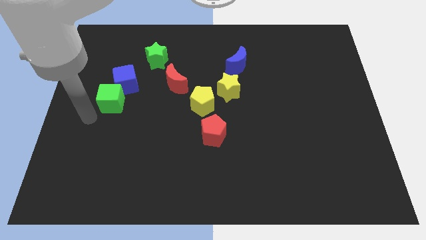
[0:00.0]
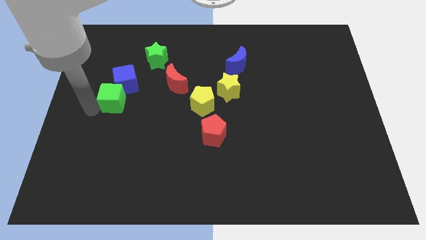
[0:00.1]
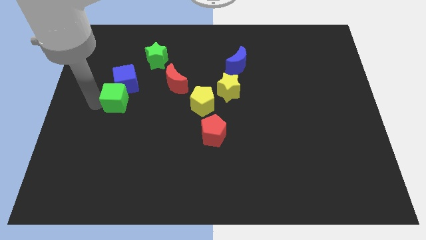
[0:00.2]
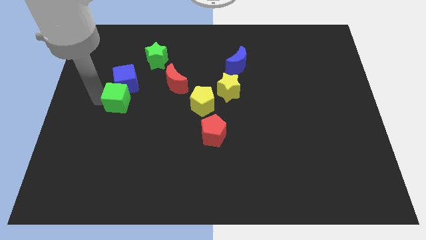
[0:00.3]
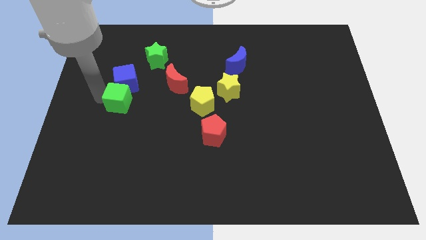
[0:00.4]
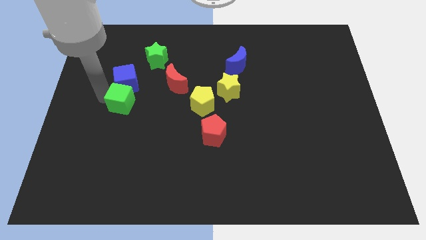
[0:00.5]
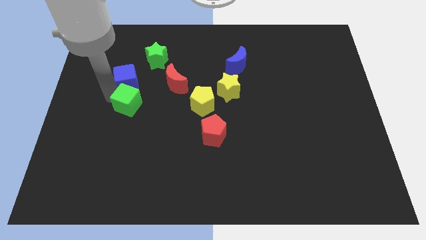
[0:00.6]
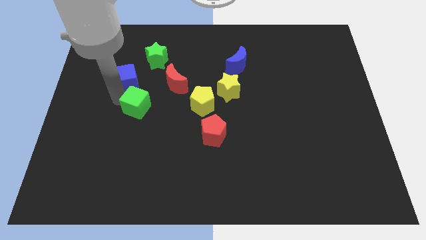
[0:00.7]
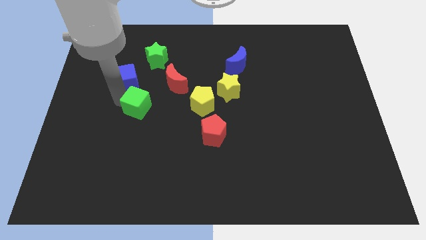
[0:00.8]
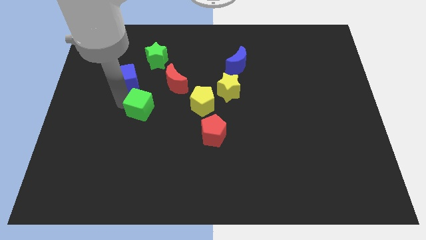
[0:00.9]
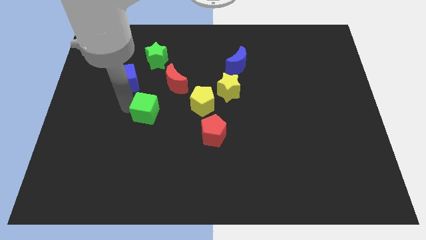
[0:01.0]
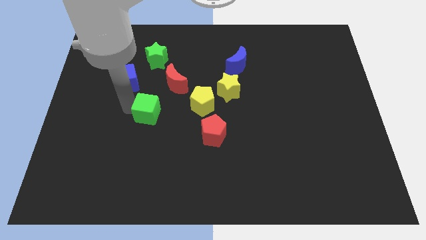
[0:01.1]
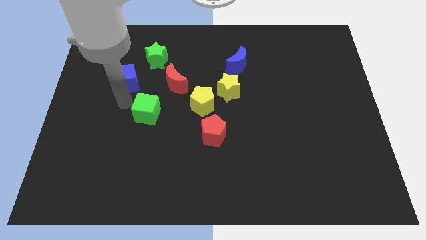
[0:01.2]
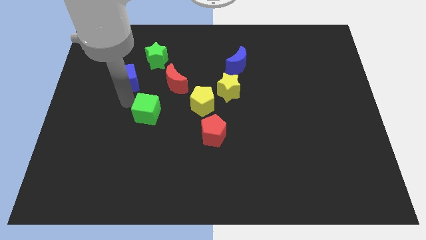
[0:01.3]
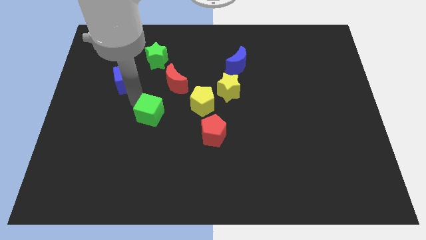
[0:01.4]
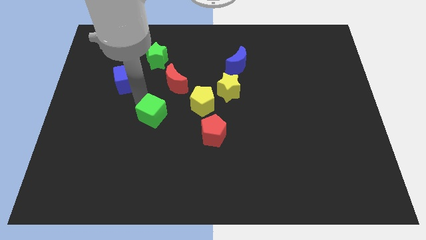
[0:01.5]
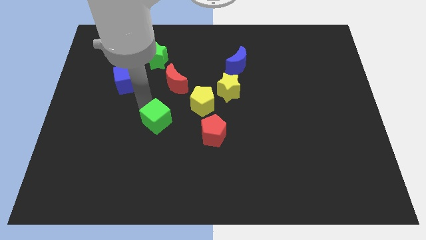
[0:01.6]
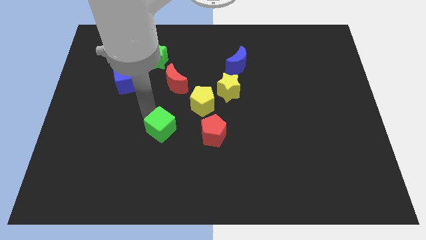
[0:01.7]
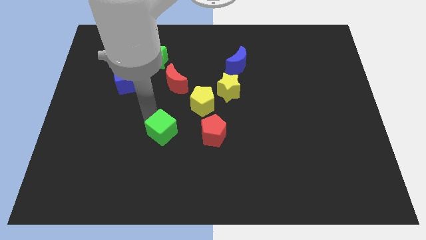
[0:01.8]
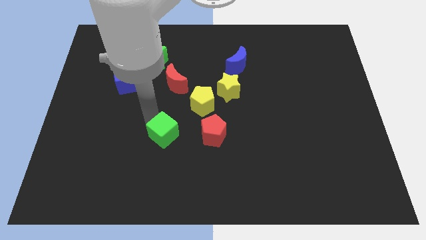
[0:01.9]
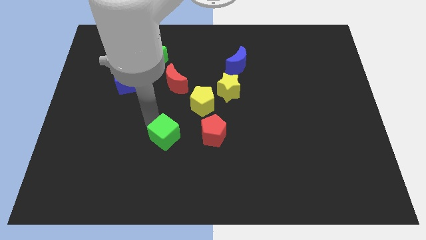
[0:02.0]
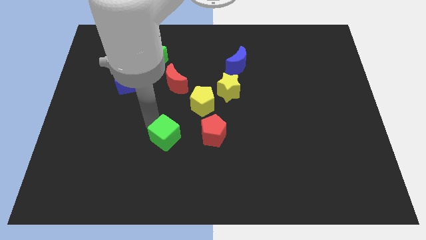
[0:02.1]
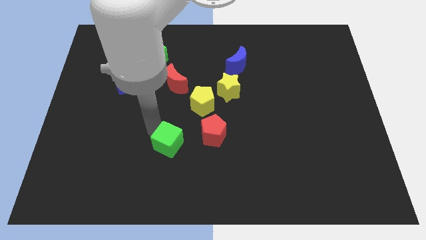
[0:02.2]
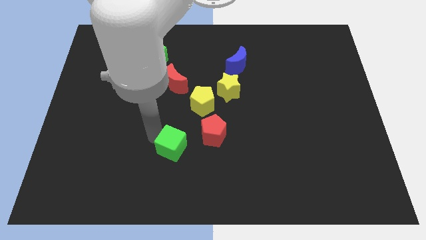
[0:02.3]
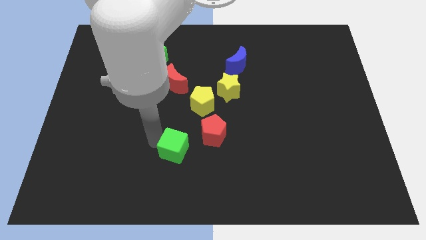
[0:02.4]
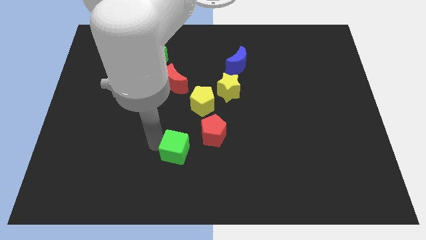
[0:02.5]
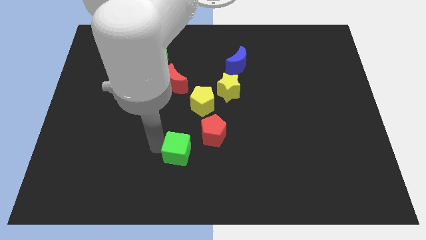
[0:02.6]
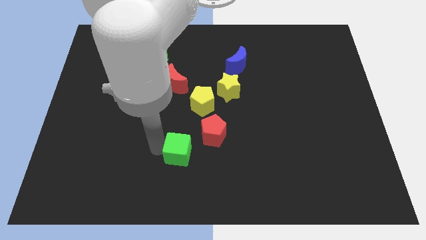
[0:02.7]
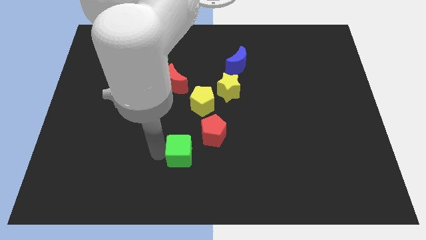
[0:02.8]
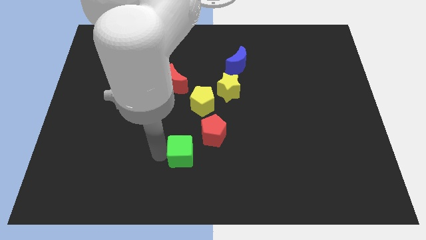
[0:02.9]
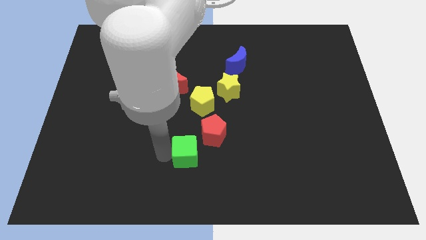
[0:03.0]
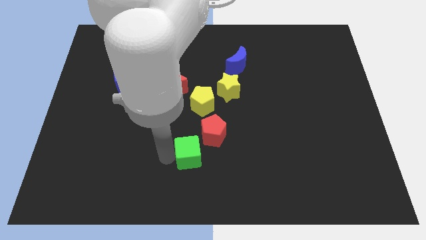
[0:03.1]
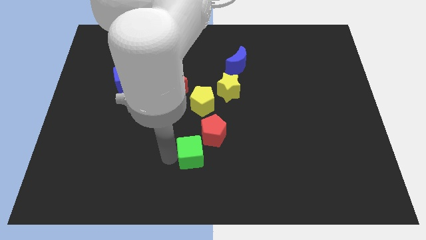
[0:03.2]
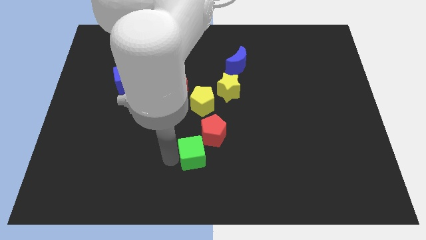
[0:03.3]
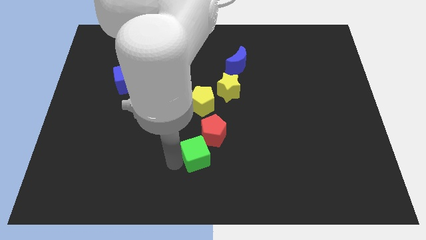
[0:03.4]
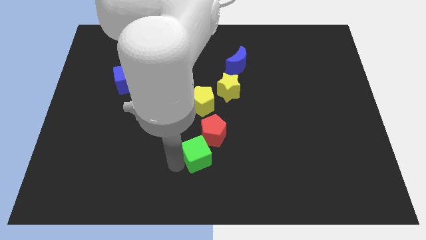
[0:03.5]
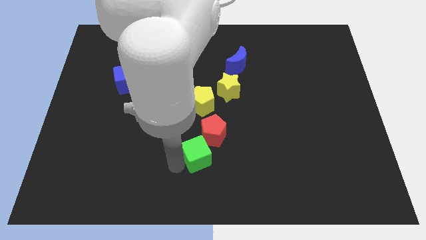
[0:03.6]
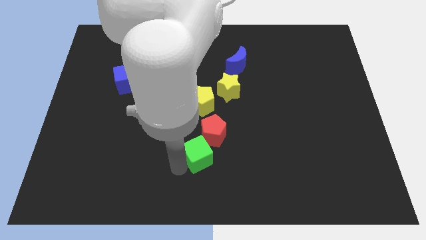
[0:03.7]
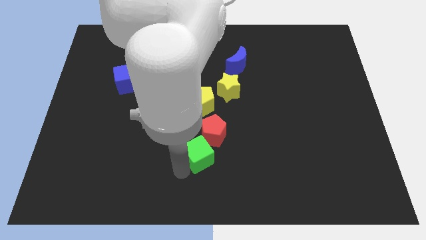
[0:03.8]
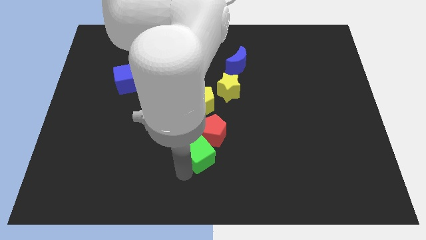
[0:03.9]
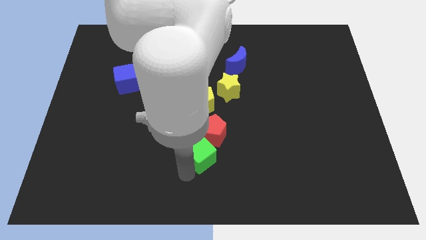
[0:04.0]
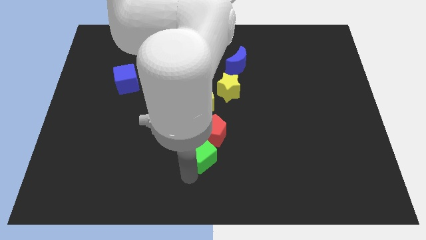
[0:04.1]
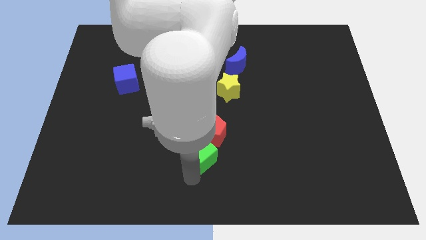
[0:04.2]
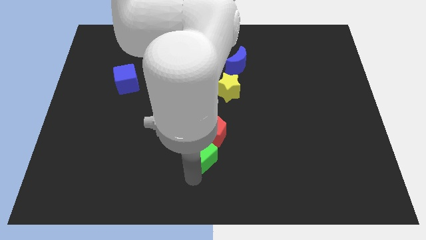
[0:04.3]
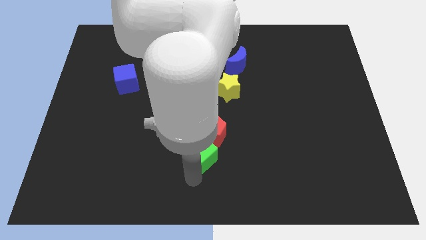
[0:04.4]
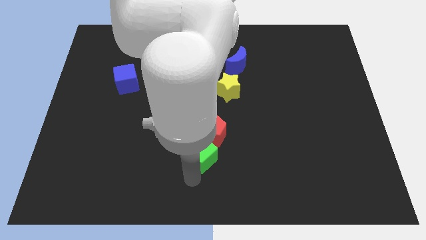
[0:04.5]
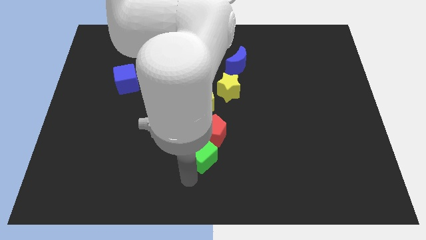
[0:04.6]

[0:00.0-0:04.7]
place the green cube below the red pentagon

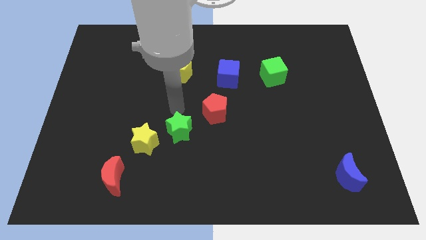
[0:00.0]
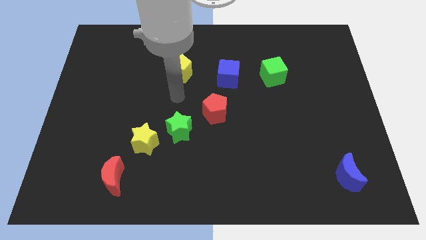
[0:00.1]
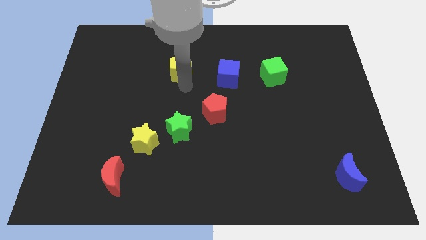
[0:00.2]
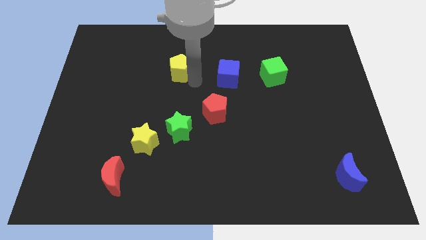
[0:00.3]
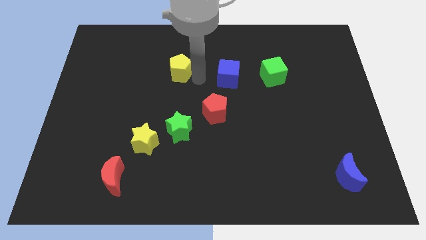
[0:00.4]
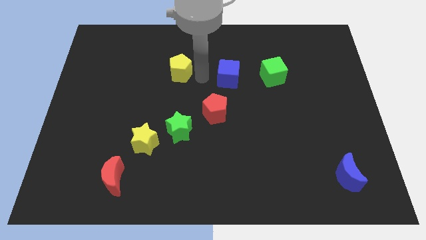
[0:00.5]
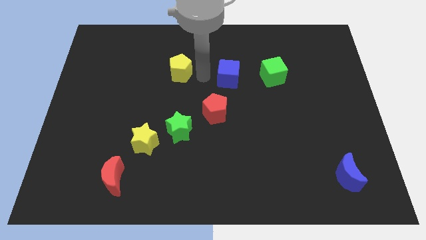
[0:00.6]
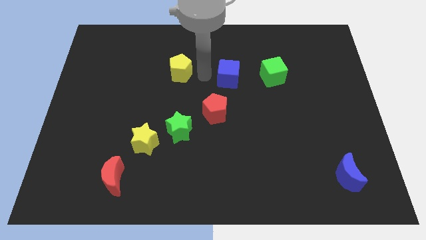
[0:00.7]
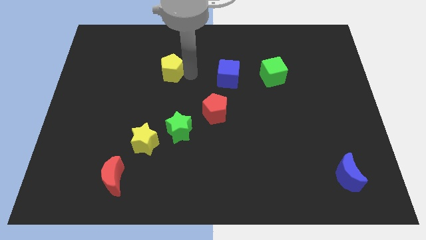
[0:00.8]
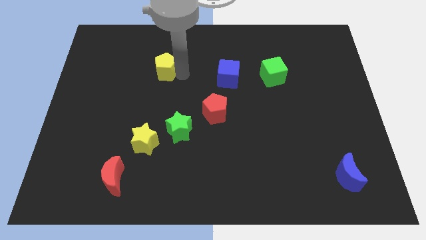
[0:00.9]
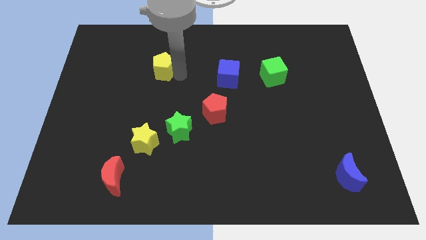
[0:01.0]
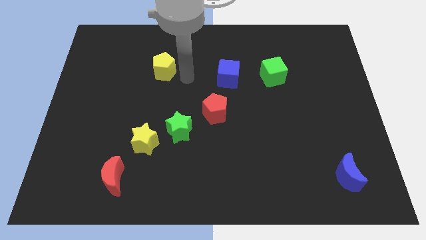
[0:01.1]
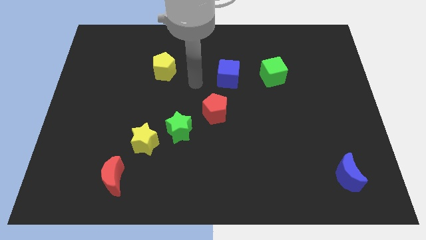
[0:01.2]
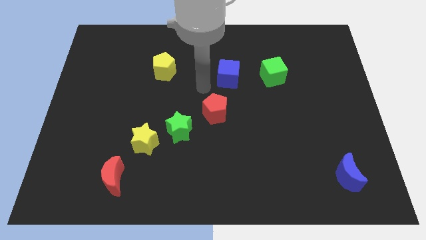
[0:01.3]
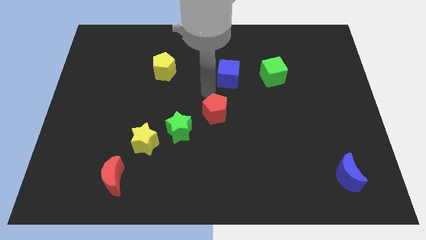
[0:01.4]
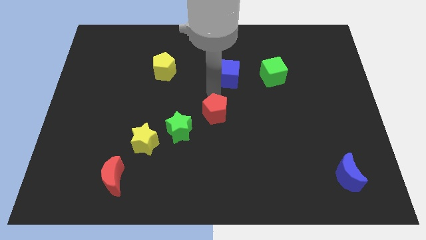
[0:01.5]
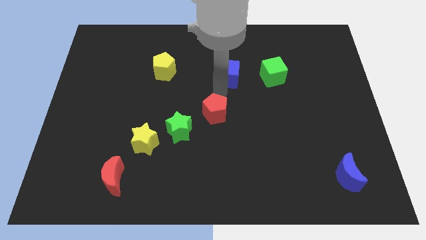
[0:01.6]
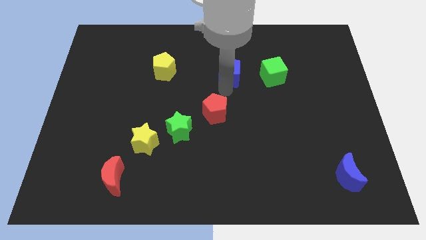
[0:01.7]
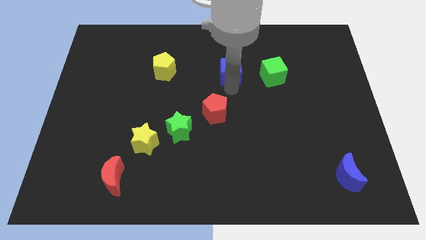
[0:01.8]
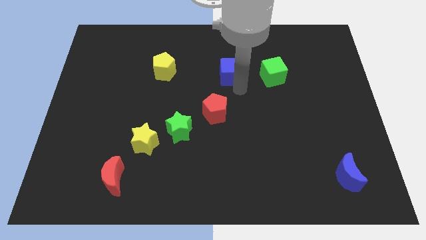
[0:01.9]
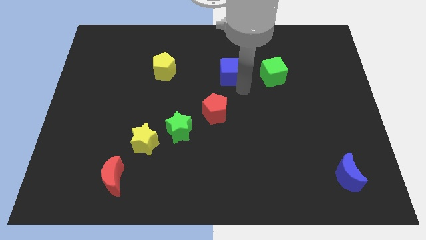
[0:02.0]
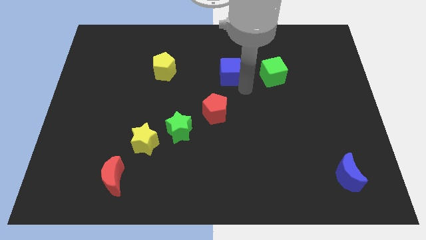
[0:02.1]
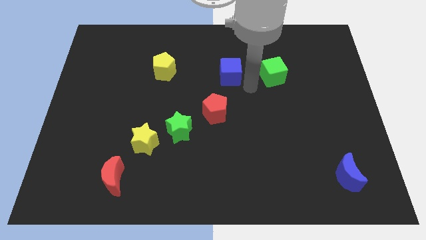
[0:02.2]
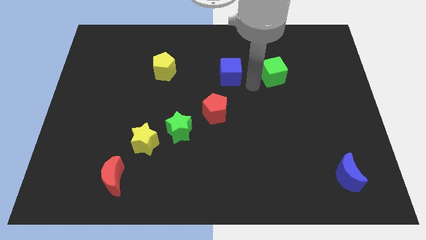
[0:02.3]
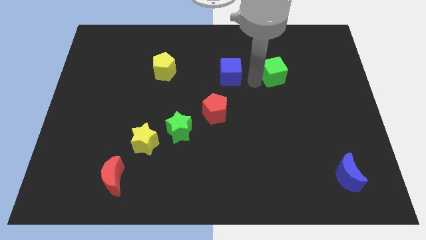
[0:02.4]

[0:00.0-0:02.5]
slightly move the yellow pentagon towards left

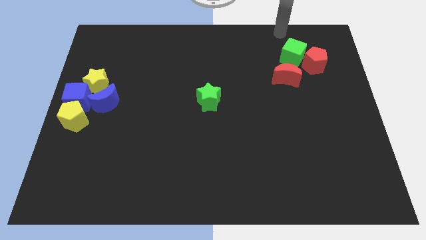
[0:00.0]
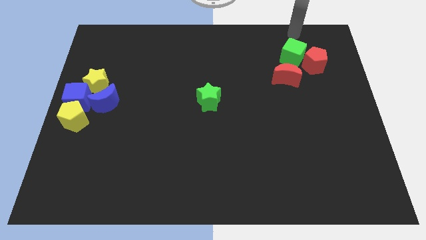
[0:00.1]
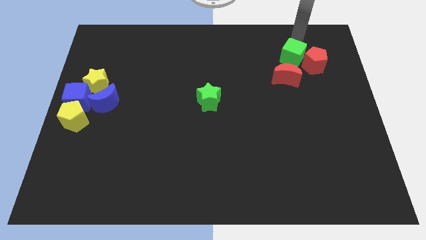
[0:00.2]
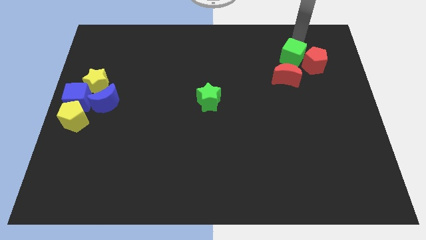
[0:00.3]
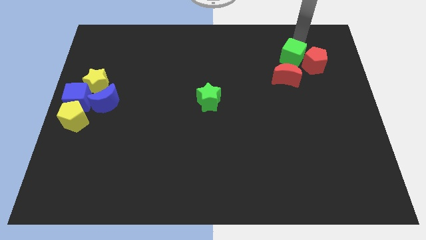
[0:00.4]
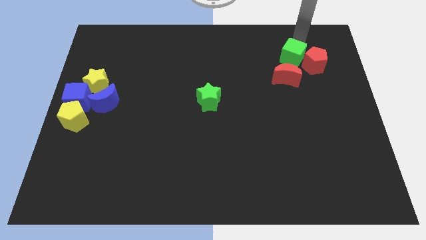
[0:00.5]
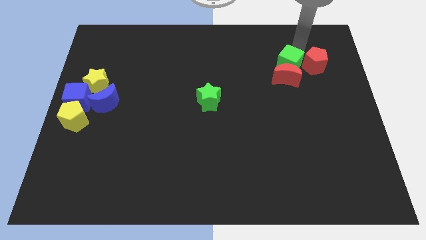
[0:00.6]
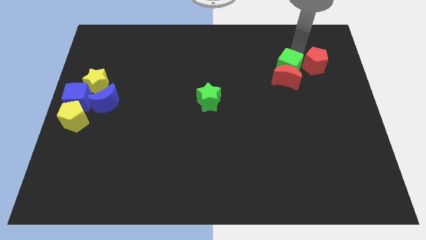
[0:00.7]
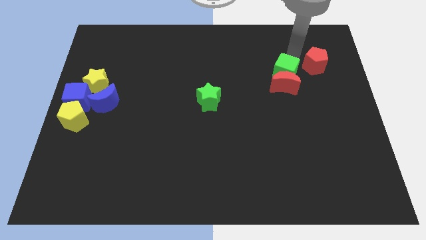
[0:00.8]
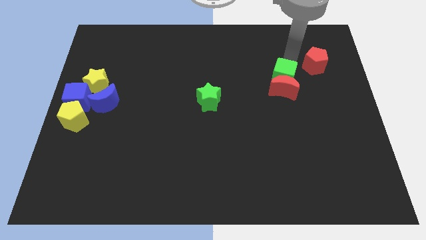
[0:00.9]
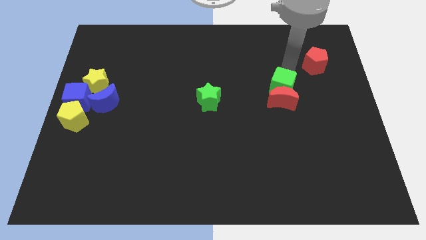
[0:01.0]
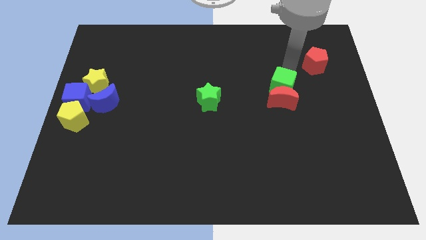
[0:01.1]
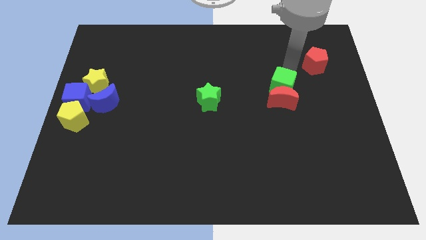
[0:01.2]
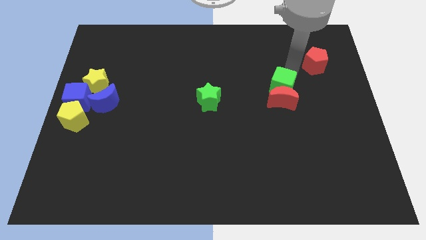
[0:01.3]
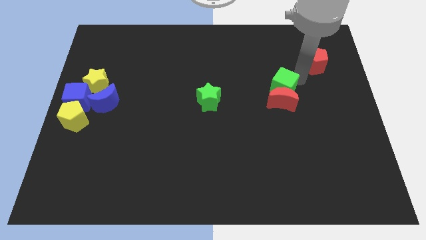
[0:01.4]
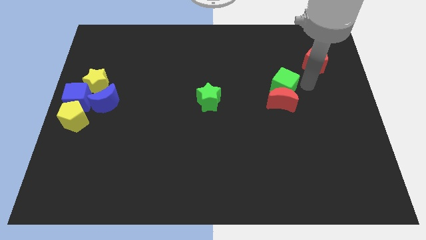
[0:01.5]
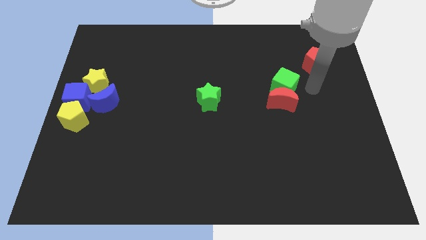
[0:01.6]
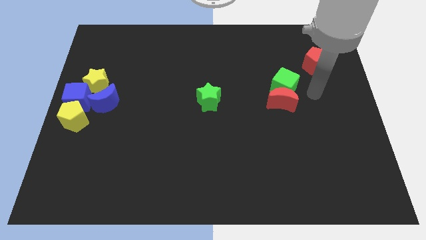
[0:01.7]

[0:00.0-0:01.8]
push the green cube into the red moon towards down
